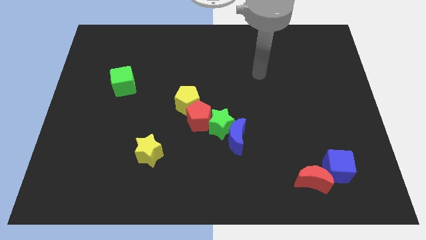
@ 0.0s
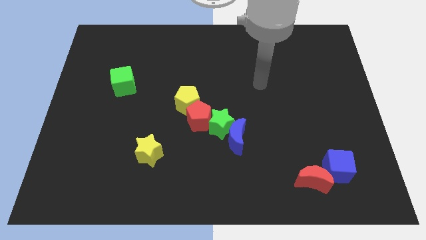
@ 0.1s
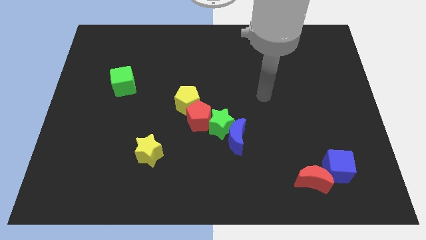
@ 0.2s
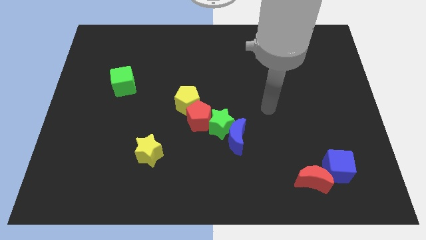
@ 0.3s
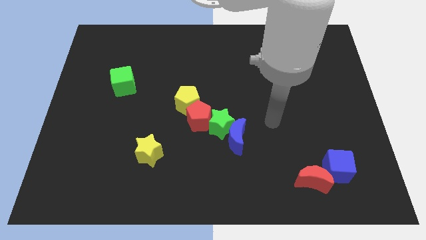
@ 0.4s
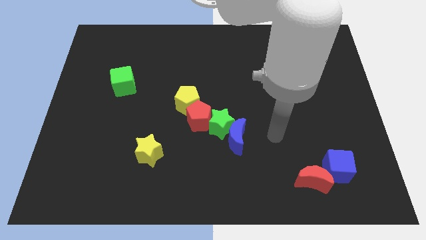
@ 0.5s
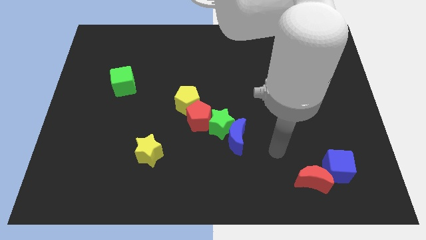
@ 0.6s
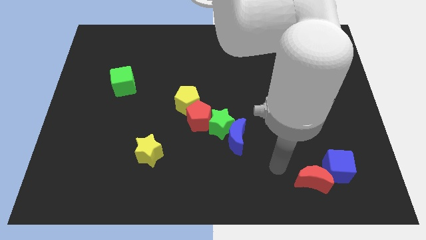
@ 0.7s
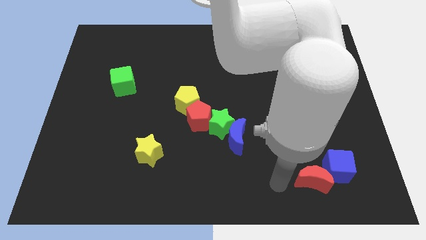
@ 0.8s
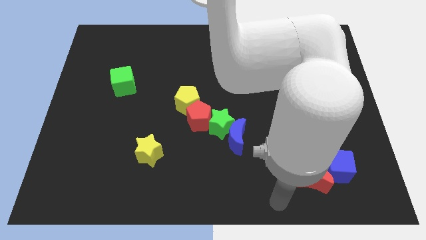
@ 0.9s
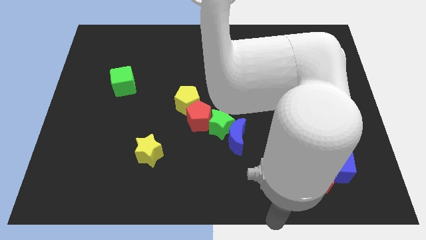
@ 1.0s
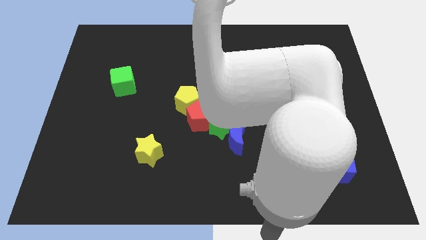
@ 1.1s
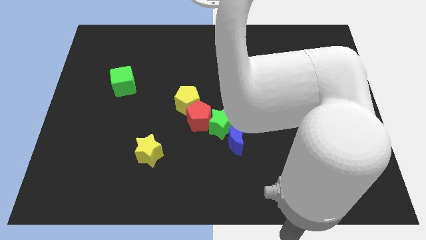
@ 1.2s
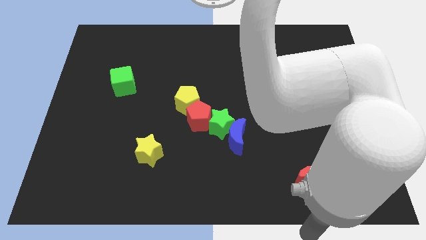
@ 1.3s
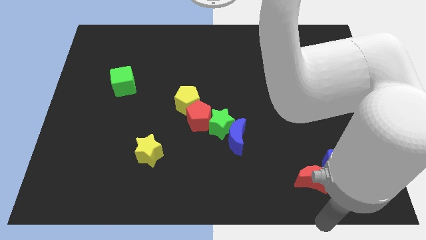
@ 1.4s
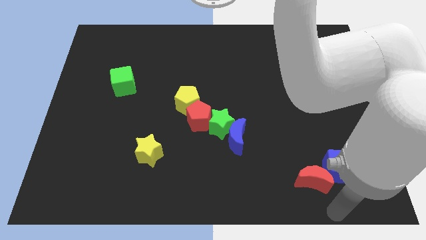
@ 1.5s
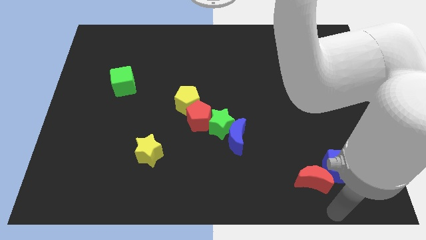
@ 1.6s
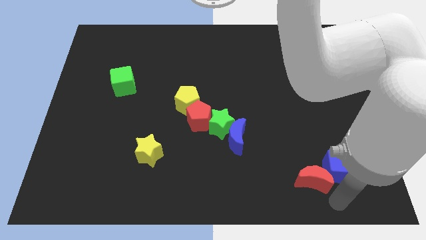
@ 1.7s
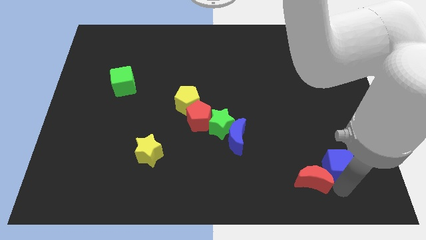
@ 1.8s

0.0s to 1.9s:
point your arm below the blue cube

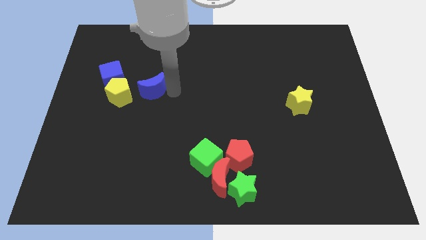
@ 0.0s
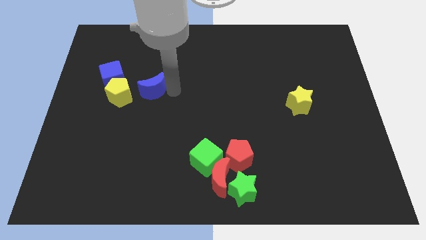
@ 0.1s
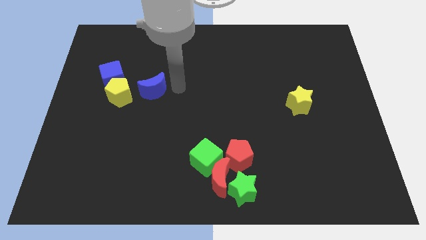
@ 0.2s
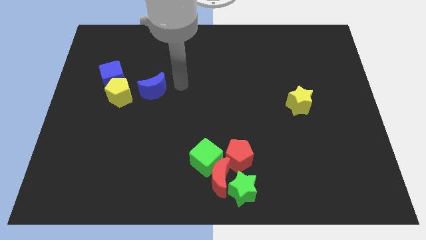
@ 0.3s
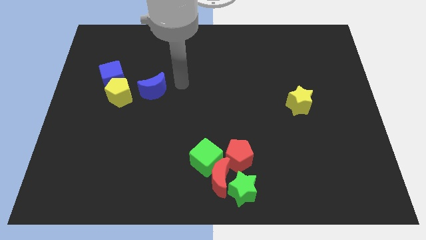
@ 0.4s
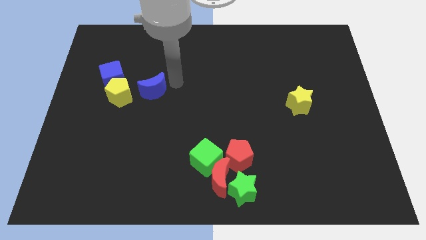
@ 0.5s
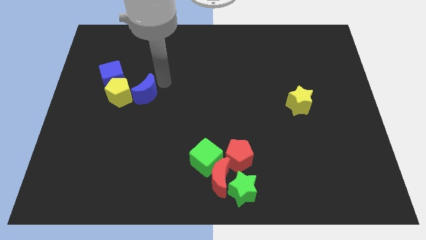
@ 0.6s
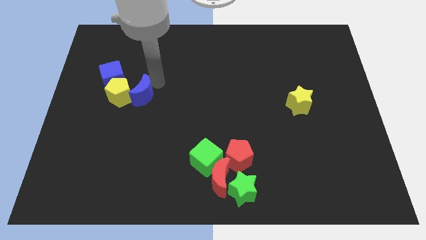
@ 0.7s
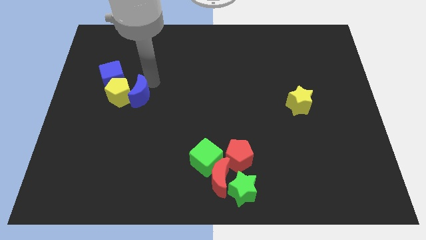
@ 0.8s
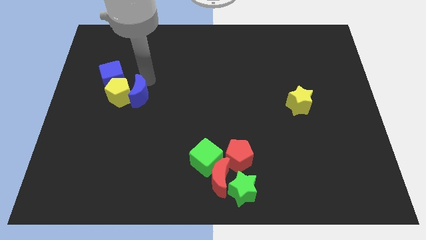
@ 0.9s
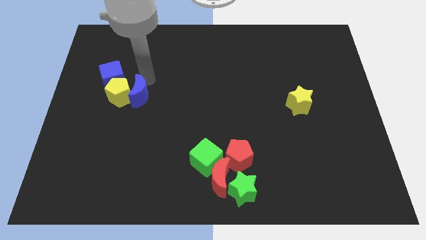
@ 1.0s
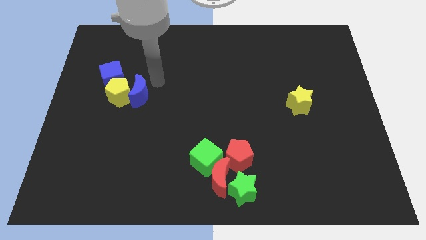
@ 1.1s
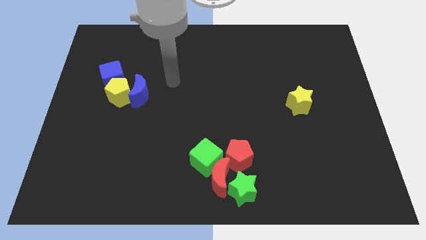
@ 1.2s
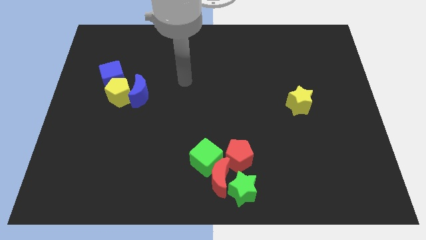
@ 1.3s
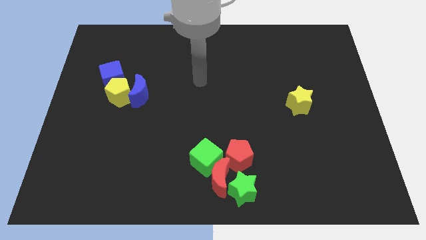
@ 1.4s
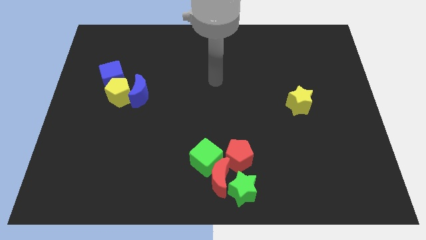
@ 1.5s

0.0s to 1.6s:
move blue moon into yellow pentagon

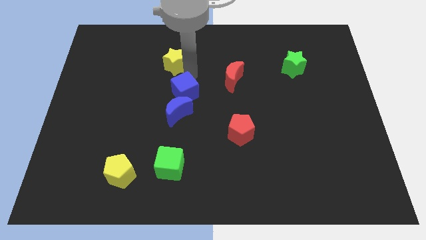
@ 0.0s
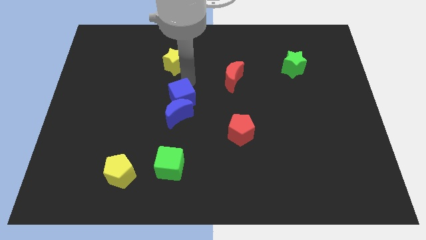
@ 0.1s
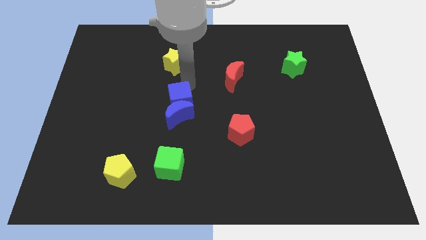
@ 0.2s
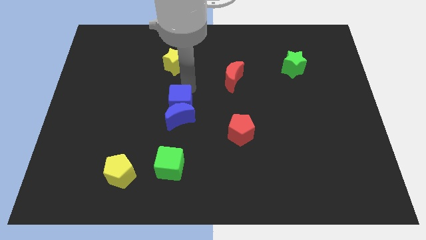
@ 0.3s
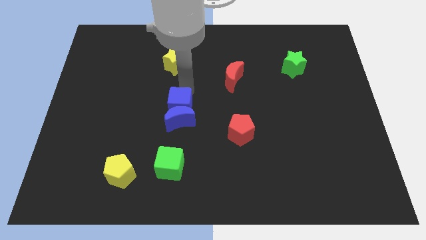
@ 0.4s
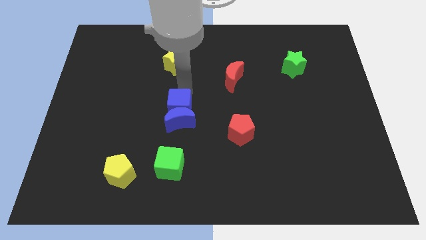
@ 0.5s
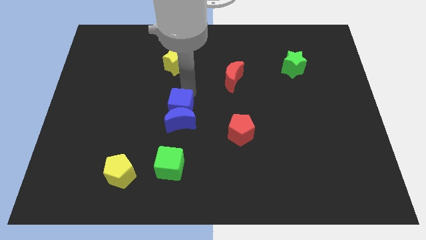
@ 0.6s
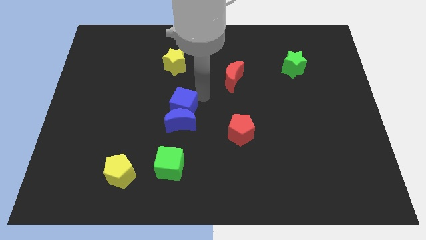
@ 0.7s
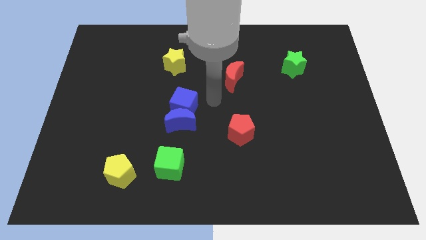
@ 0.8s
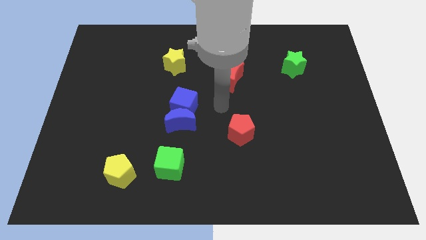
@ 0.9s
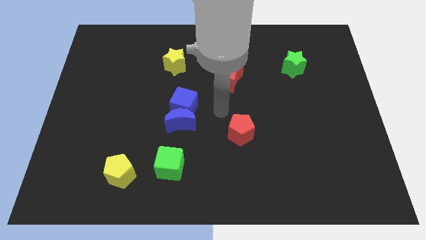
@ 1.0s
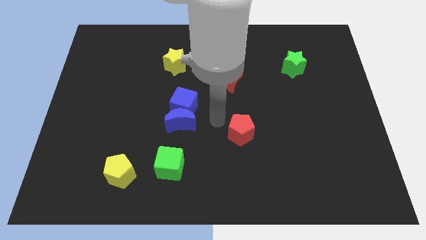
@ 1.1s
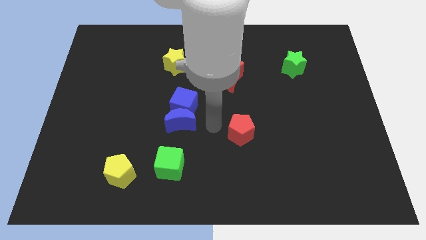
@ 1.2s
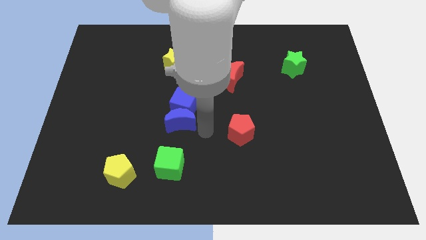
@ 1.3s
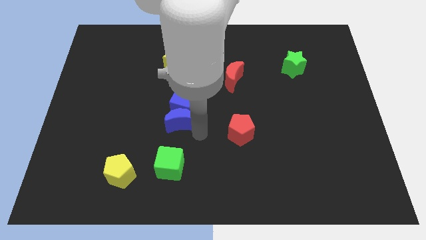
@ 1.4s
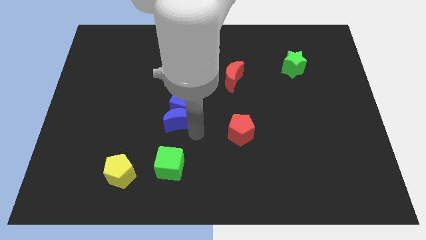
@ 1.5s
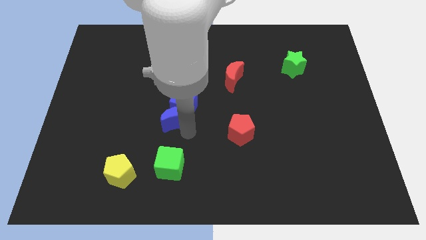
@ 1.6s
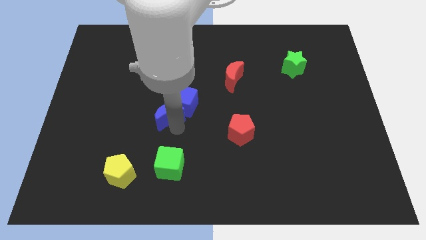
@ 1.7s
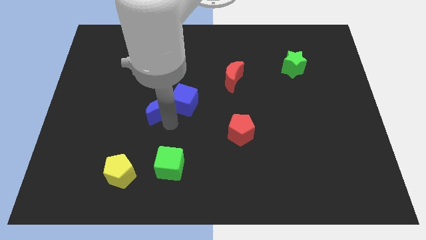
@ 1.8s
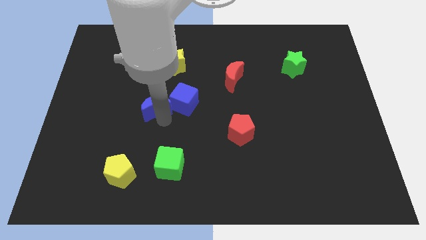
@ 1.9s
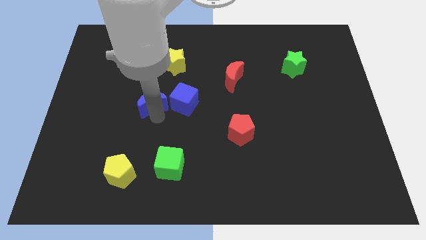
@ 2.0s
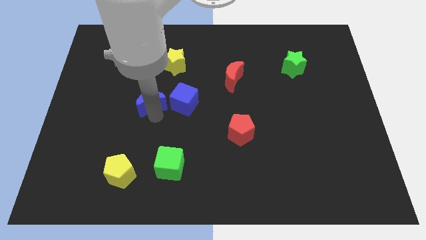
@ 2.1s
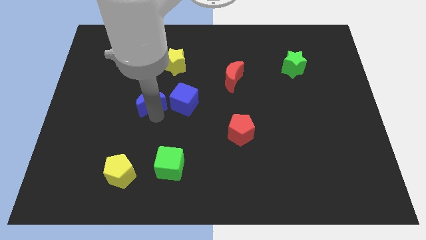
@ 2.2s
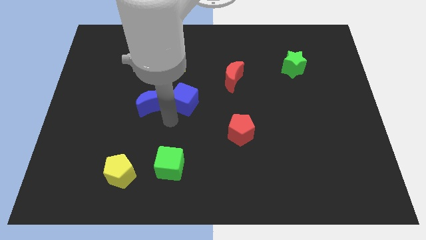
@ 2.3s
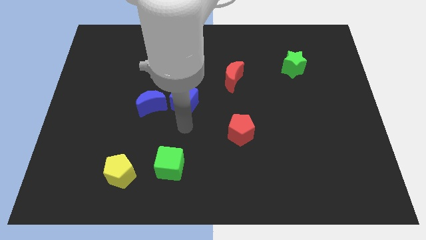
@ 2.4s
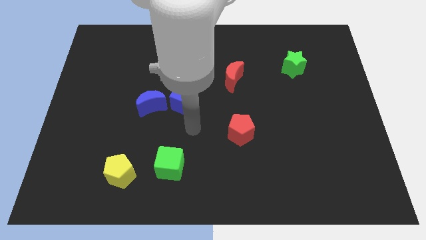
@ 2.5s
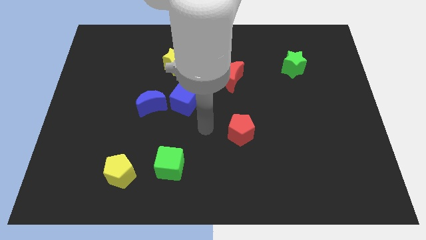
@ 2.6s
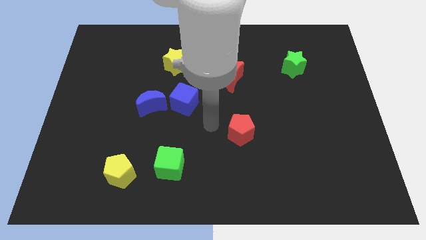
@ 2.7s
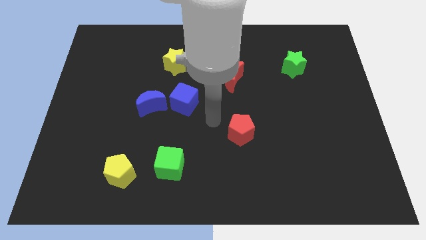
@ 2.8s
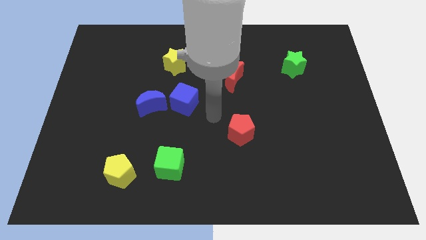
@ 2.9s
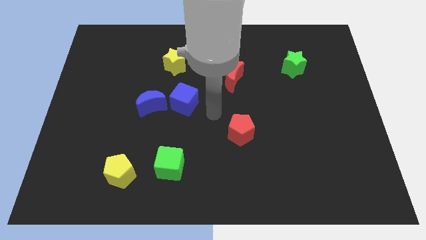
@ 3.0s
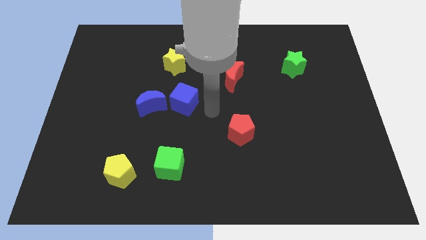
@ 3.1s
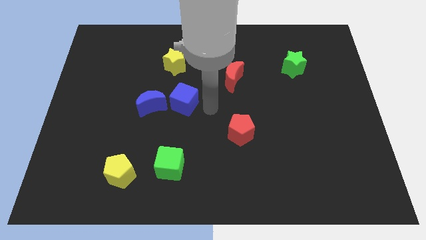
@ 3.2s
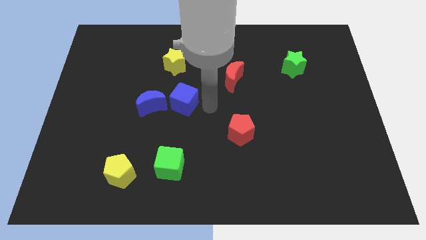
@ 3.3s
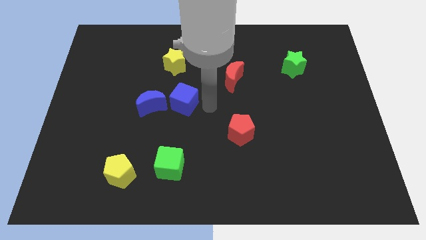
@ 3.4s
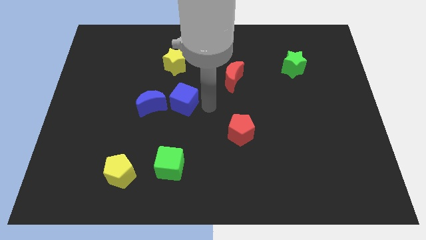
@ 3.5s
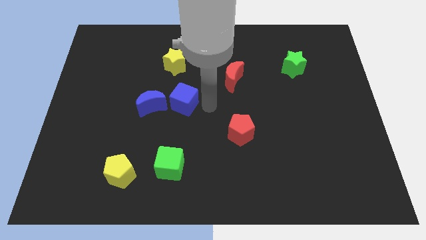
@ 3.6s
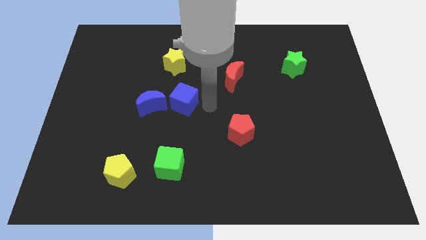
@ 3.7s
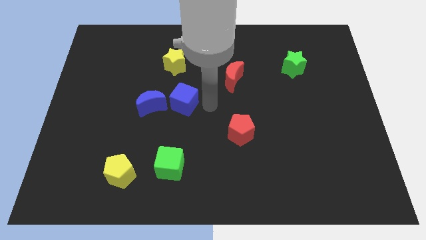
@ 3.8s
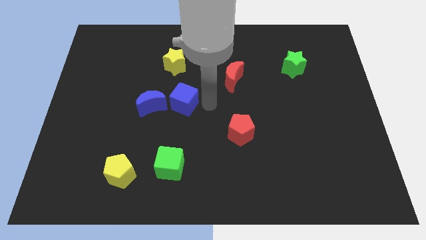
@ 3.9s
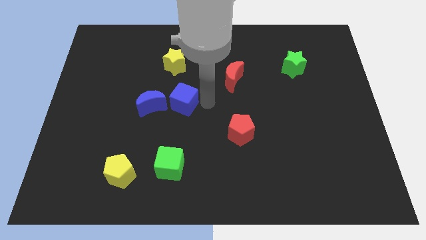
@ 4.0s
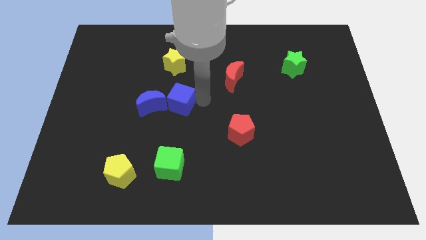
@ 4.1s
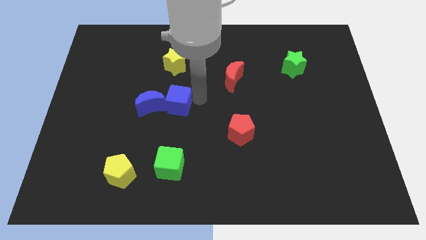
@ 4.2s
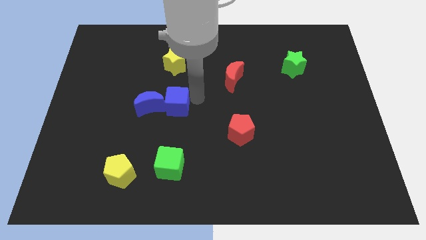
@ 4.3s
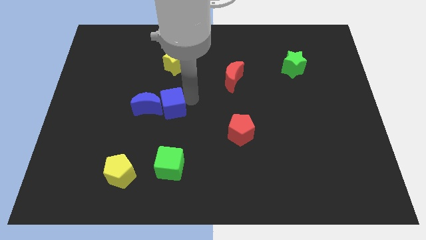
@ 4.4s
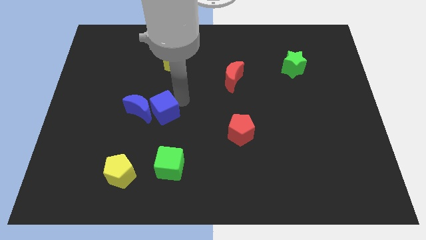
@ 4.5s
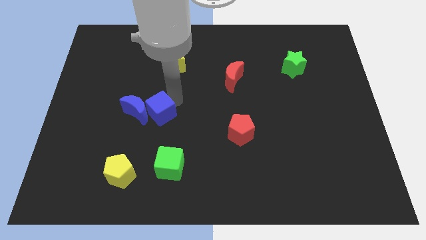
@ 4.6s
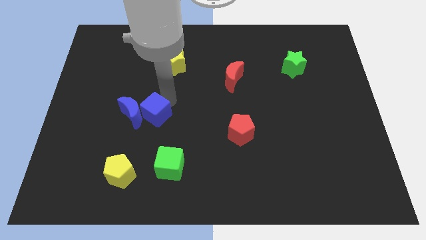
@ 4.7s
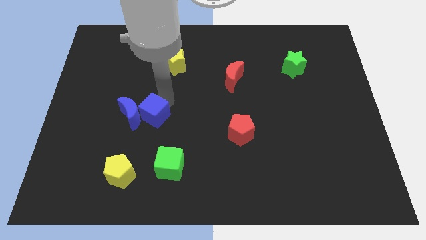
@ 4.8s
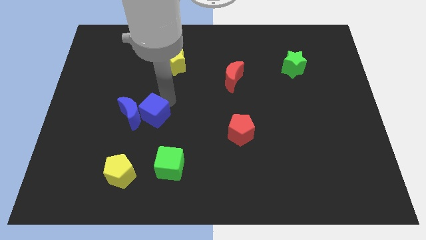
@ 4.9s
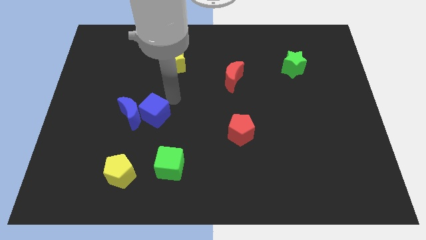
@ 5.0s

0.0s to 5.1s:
move the blue cube and blue moon towards the center left

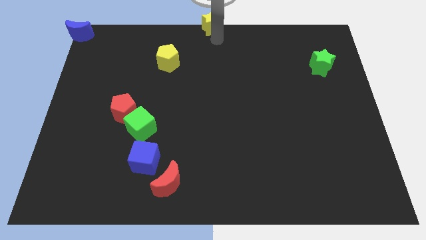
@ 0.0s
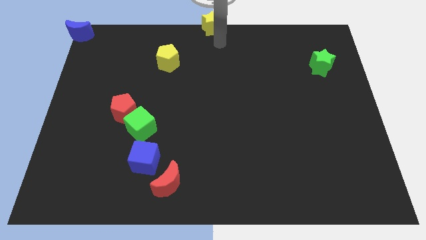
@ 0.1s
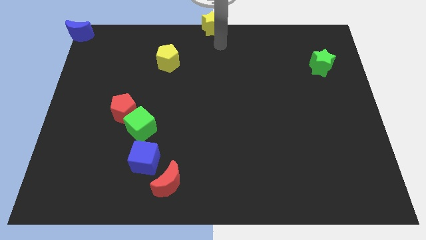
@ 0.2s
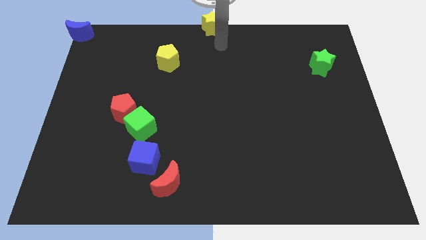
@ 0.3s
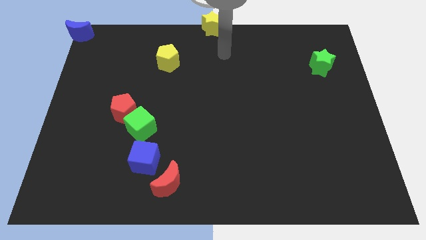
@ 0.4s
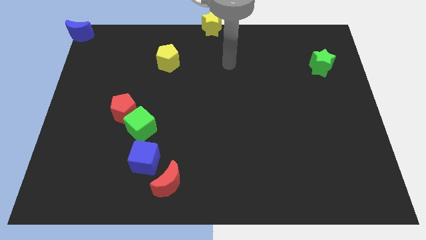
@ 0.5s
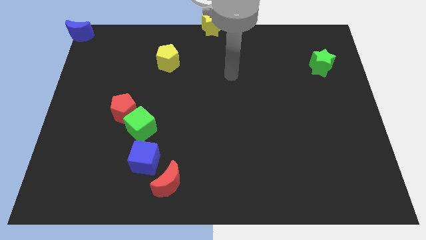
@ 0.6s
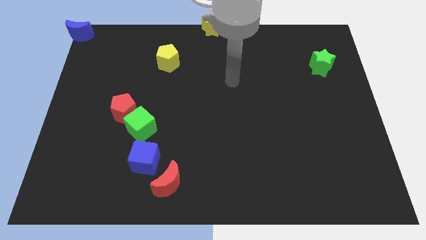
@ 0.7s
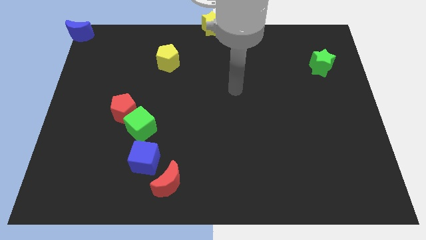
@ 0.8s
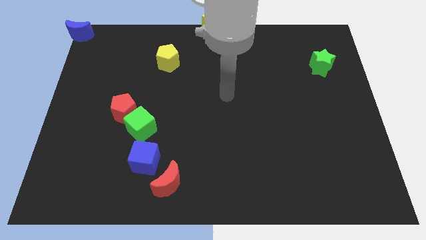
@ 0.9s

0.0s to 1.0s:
move your arm towards the center of the board
